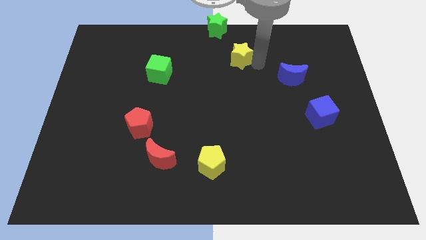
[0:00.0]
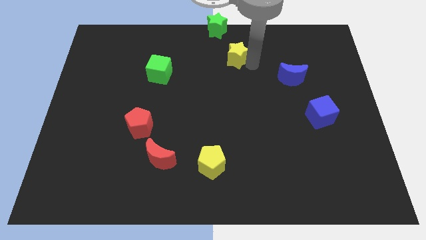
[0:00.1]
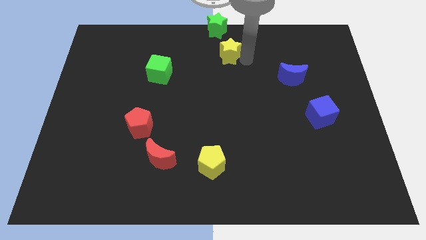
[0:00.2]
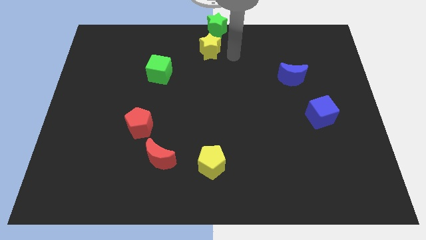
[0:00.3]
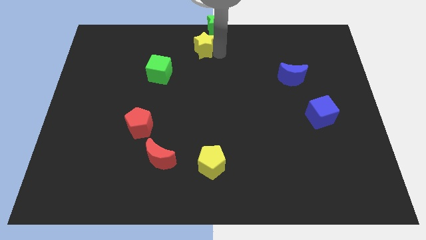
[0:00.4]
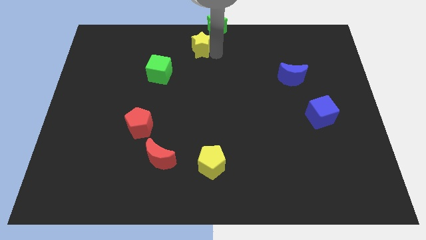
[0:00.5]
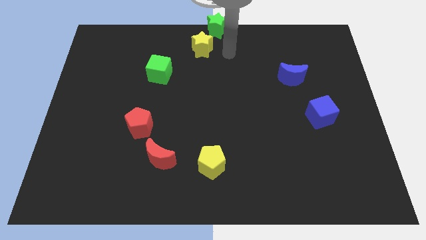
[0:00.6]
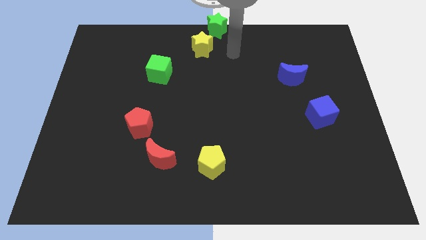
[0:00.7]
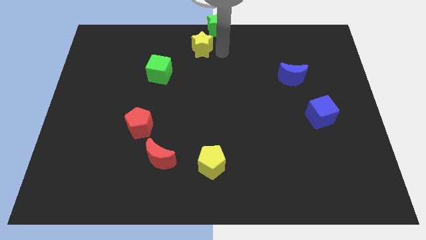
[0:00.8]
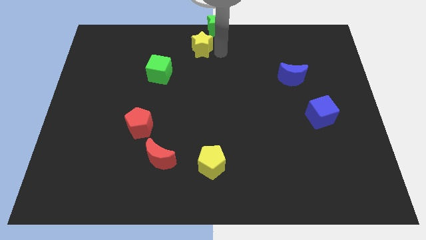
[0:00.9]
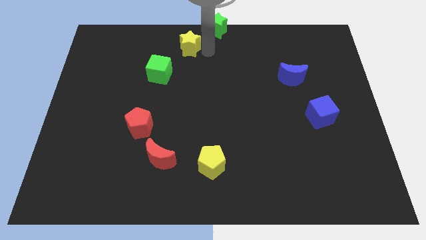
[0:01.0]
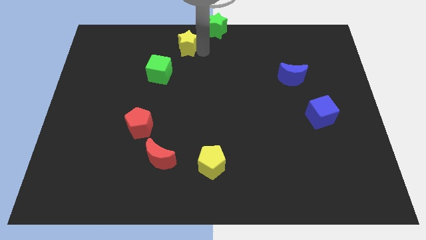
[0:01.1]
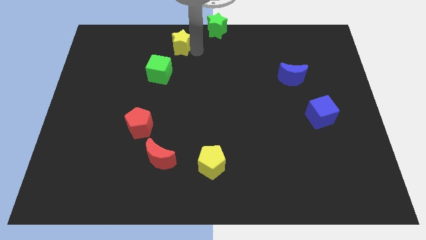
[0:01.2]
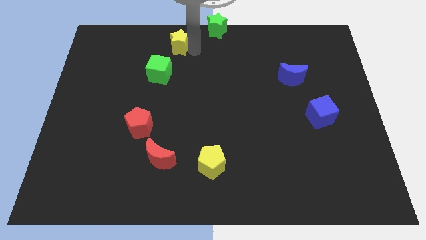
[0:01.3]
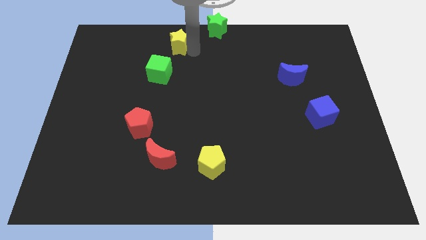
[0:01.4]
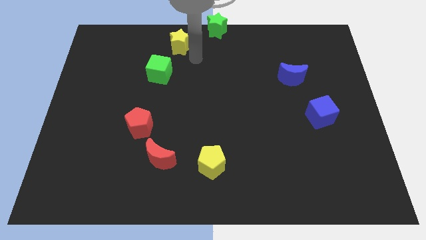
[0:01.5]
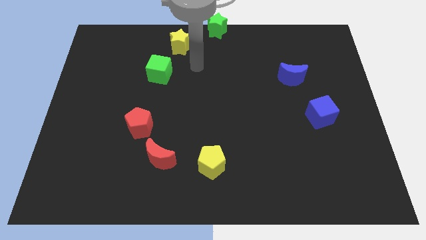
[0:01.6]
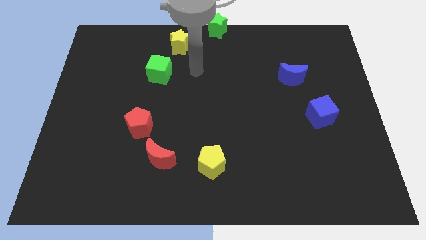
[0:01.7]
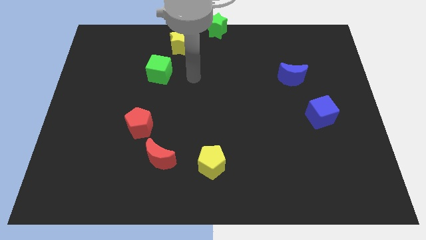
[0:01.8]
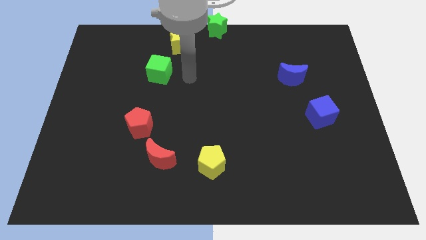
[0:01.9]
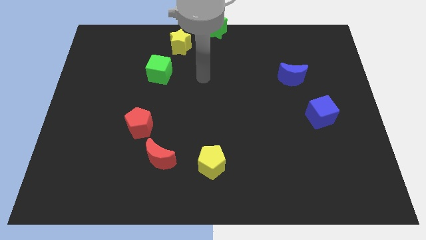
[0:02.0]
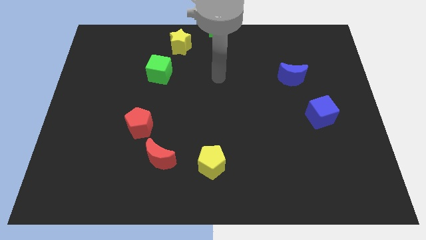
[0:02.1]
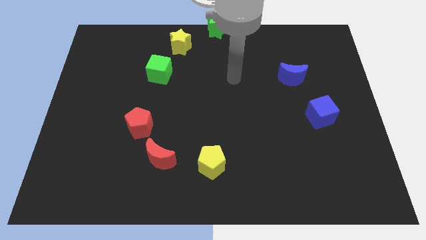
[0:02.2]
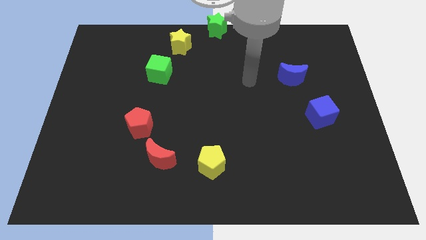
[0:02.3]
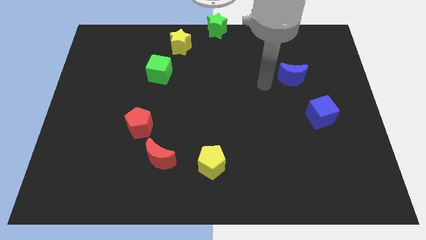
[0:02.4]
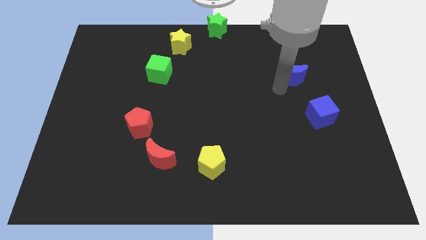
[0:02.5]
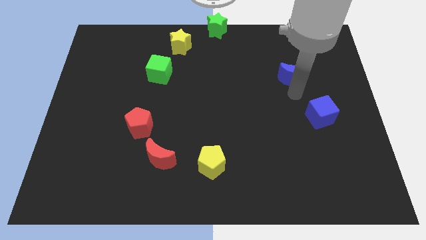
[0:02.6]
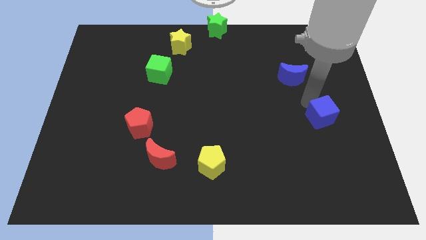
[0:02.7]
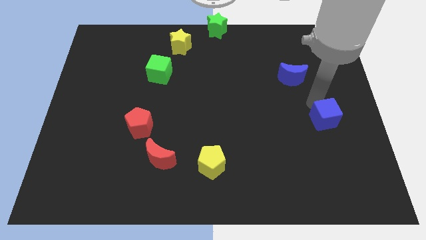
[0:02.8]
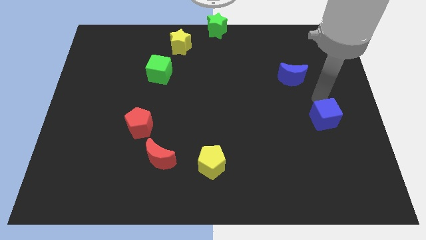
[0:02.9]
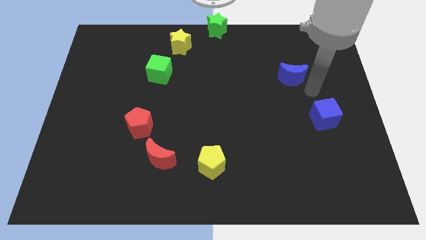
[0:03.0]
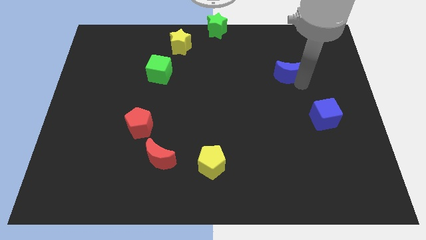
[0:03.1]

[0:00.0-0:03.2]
place the yellow star in between the green blocks

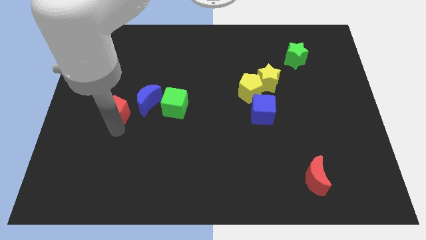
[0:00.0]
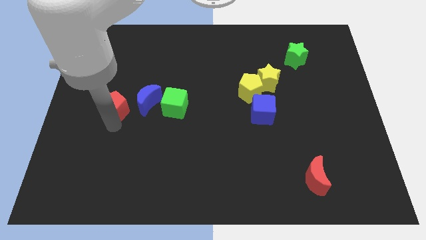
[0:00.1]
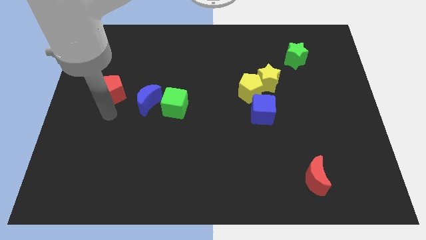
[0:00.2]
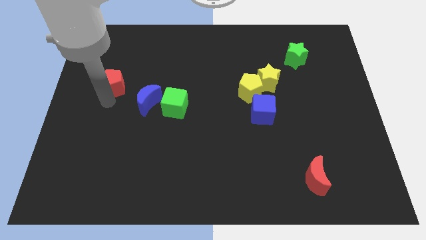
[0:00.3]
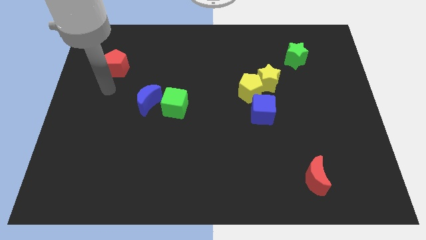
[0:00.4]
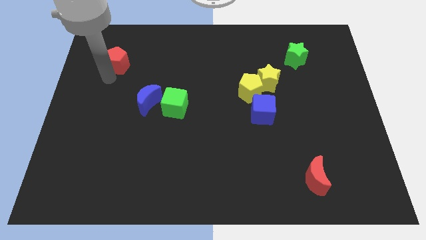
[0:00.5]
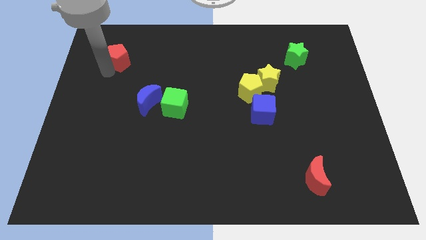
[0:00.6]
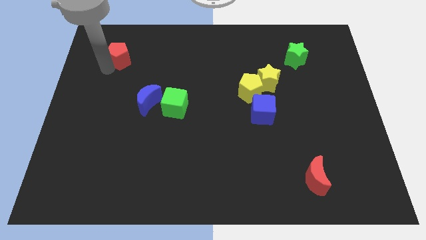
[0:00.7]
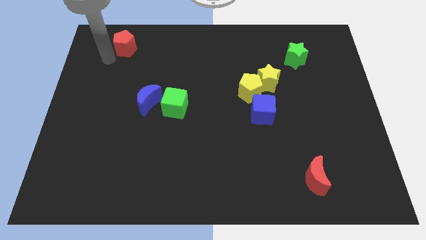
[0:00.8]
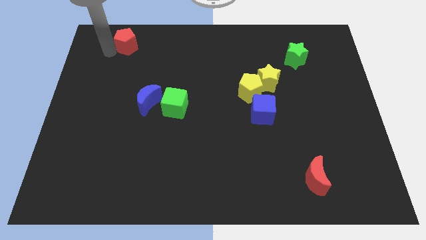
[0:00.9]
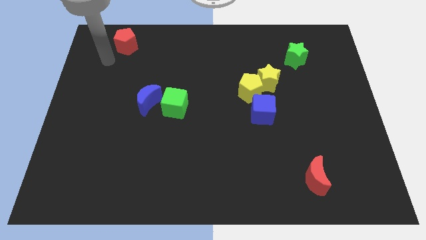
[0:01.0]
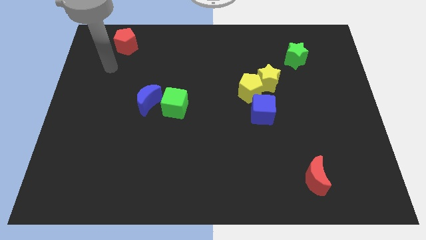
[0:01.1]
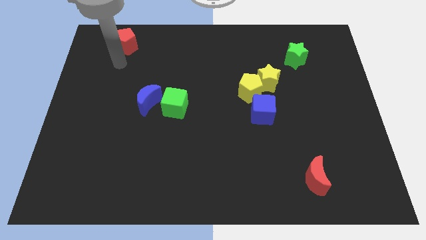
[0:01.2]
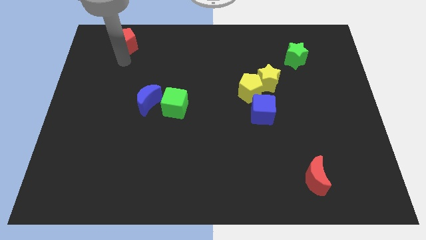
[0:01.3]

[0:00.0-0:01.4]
push the red pentagon to the top of the board

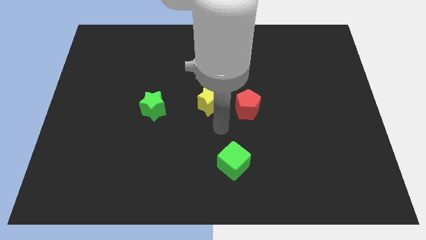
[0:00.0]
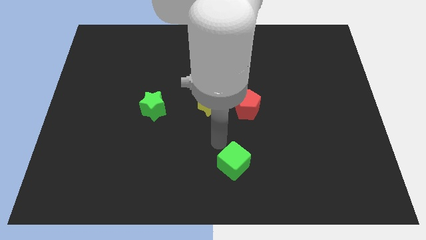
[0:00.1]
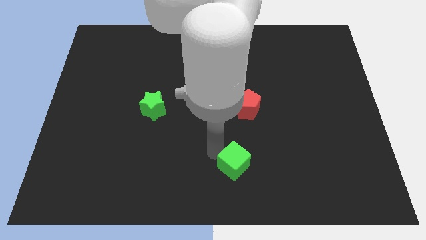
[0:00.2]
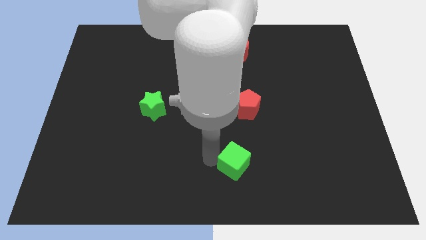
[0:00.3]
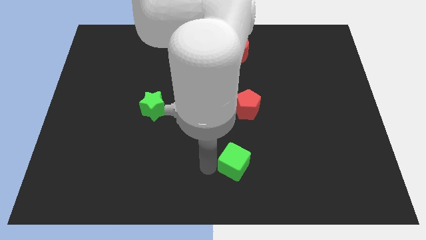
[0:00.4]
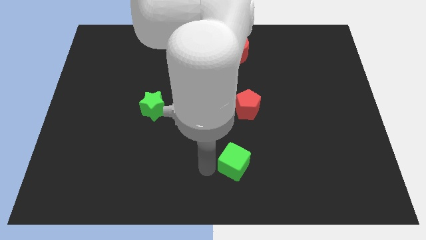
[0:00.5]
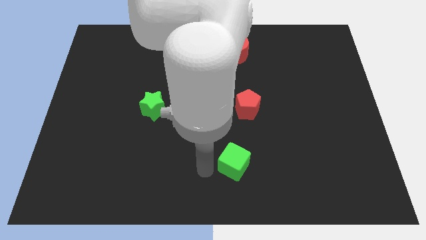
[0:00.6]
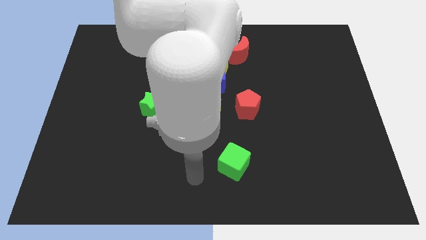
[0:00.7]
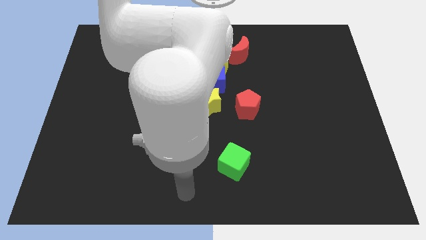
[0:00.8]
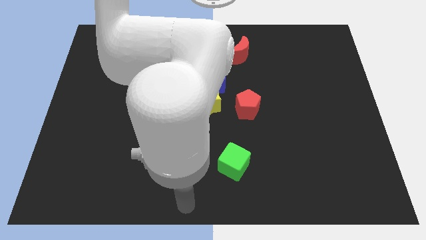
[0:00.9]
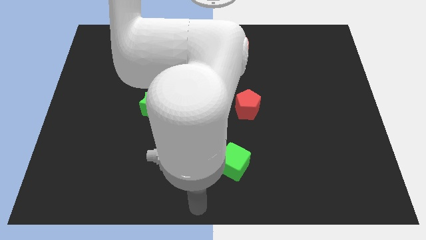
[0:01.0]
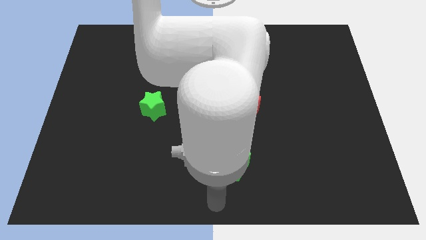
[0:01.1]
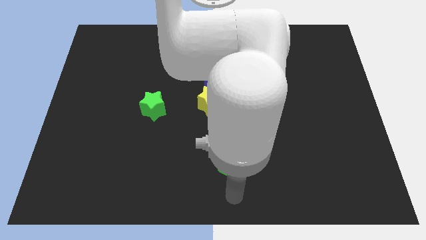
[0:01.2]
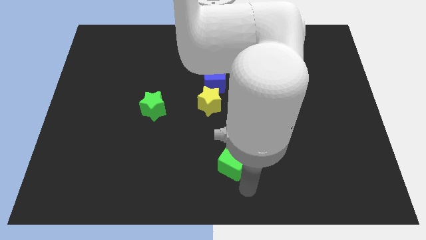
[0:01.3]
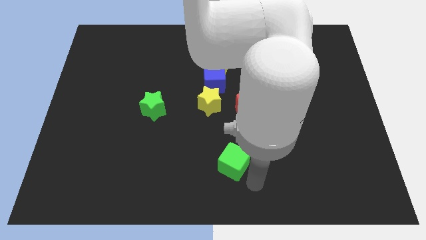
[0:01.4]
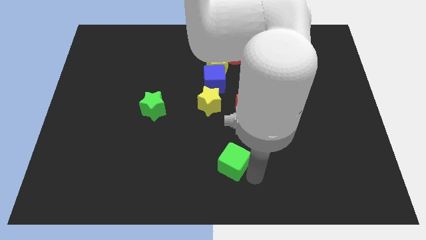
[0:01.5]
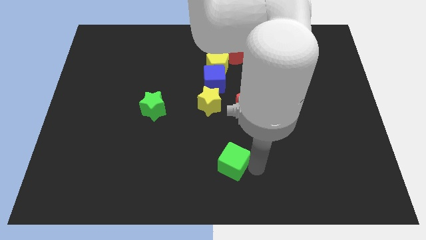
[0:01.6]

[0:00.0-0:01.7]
slightly touch the green cube

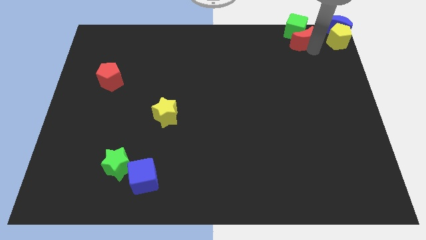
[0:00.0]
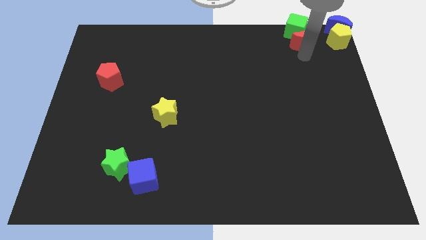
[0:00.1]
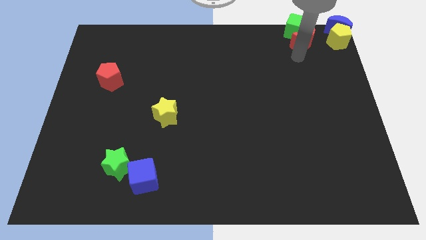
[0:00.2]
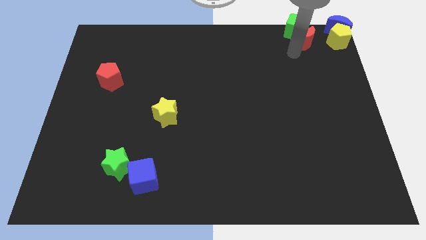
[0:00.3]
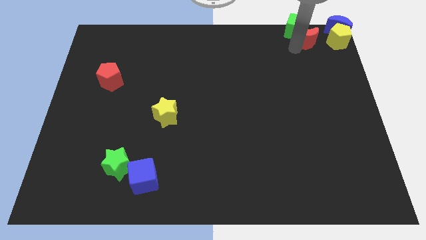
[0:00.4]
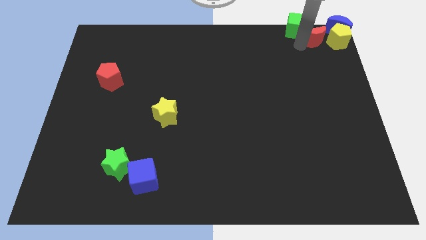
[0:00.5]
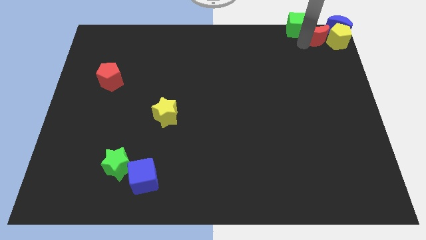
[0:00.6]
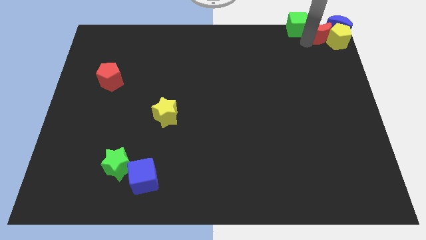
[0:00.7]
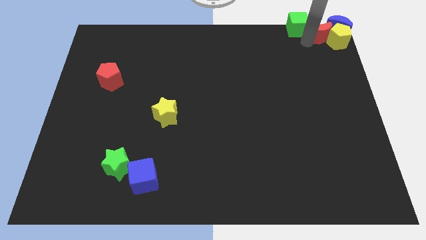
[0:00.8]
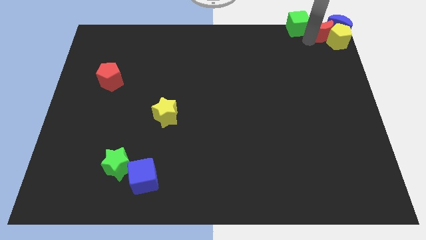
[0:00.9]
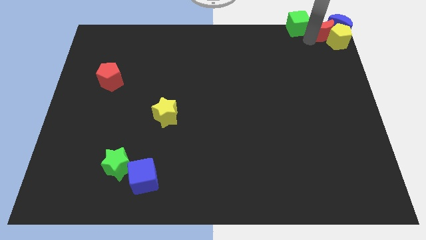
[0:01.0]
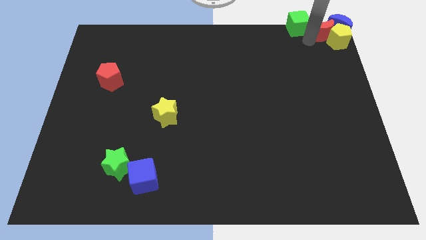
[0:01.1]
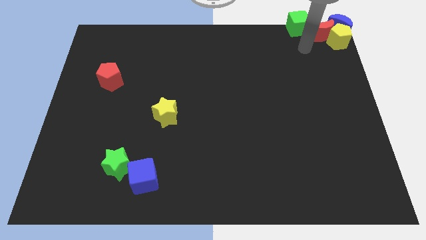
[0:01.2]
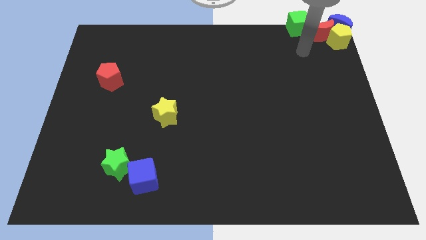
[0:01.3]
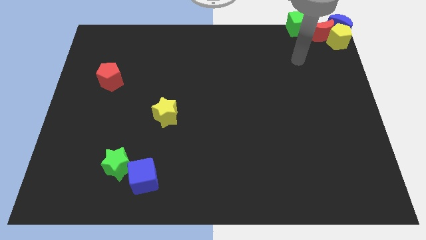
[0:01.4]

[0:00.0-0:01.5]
push the red crescent into the blue crescent

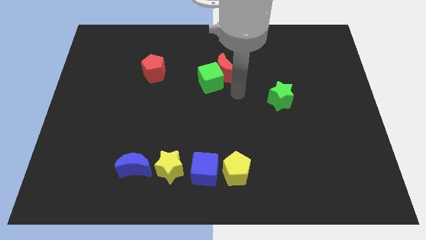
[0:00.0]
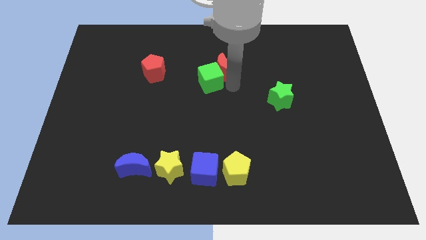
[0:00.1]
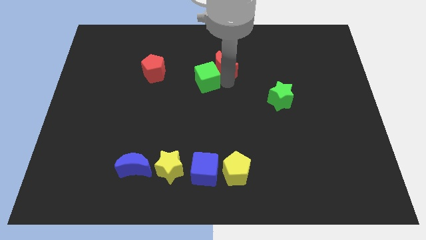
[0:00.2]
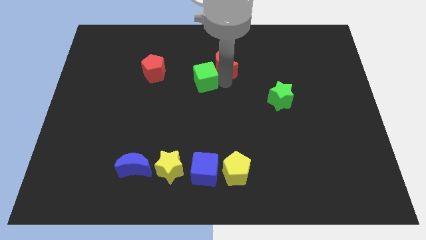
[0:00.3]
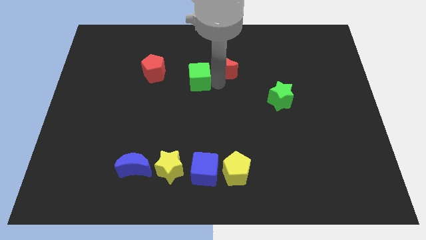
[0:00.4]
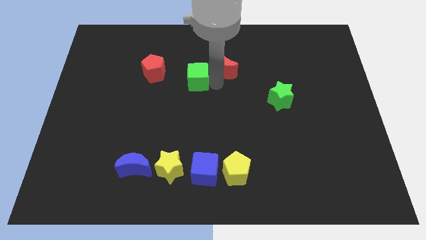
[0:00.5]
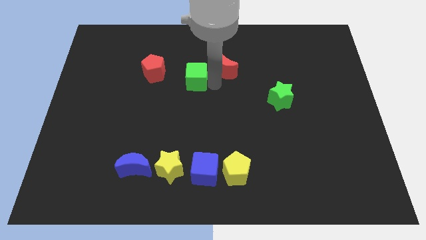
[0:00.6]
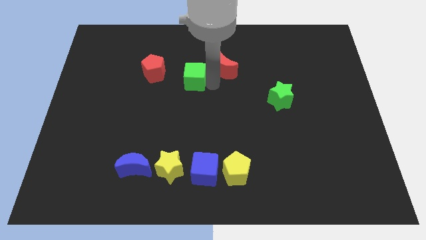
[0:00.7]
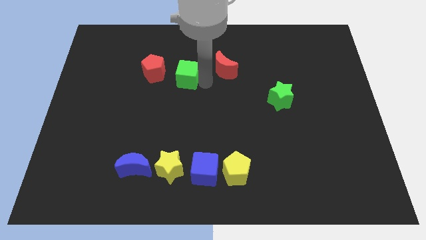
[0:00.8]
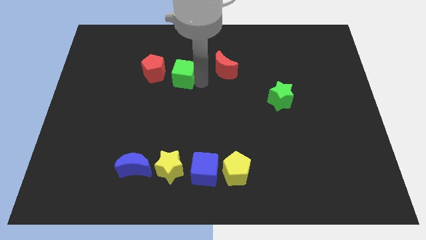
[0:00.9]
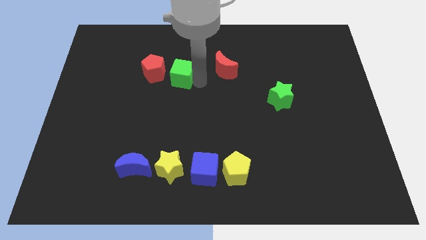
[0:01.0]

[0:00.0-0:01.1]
push the green cube away from the red crescent

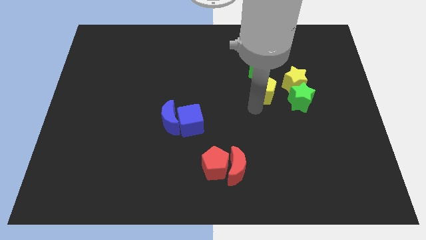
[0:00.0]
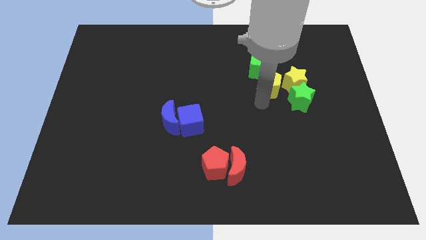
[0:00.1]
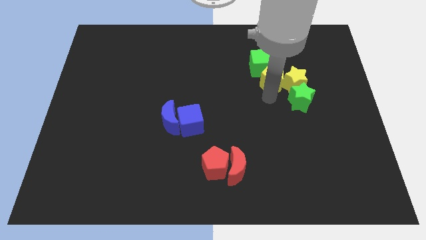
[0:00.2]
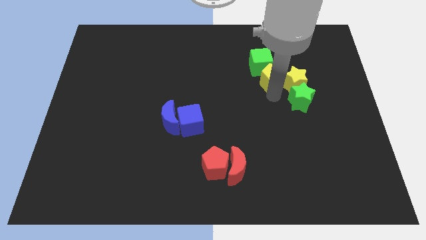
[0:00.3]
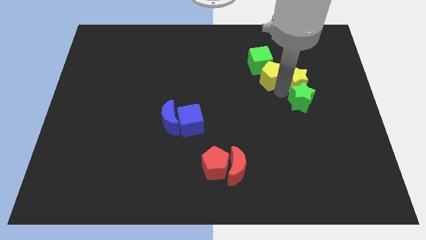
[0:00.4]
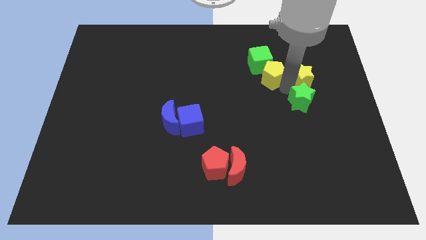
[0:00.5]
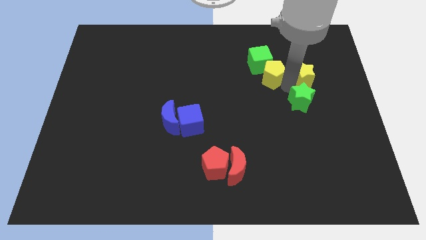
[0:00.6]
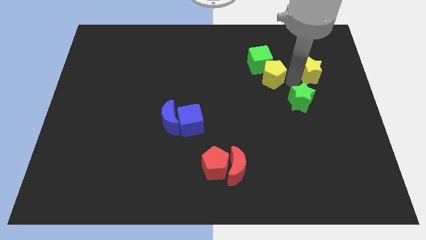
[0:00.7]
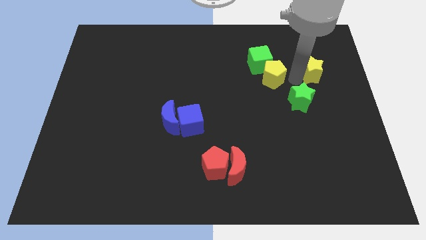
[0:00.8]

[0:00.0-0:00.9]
place the yellow pentagon below the green cube
